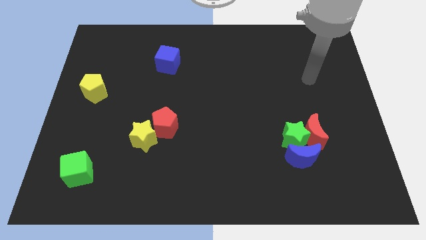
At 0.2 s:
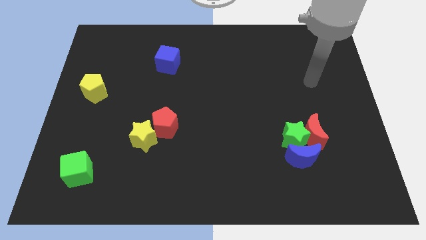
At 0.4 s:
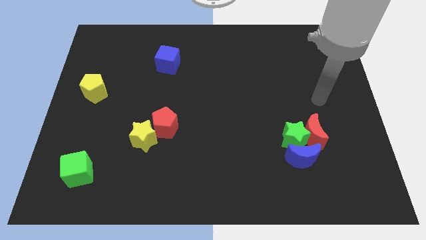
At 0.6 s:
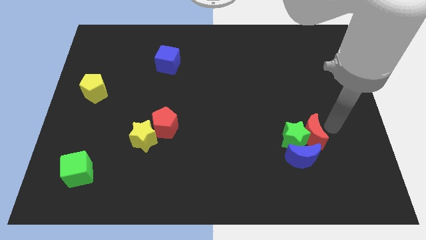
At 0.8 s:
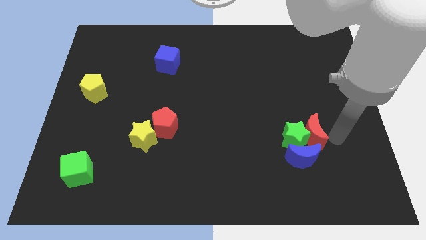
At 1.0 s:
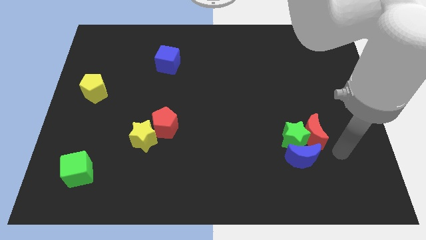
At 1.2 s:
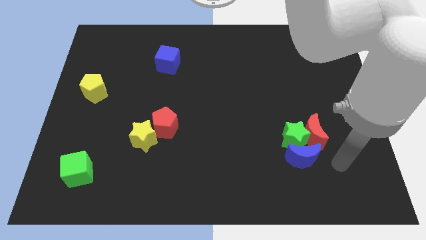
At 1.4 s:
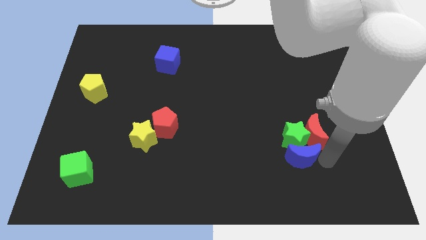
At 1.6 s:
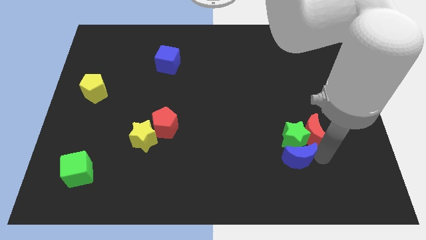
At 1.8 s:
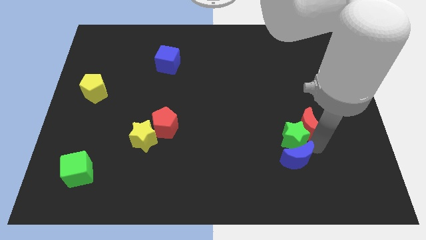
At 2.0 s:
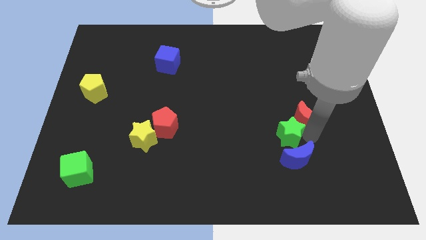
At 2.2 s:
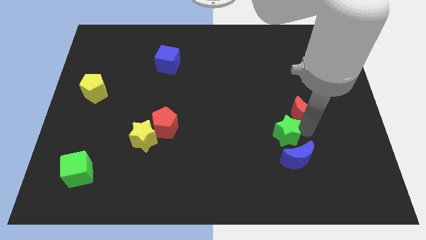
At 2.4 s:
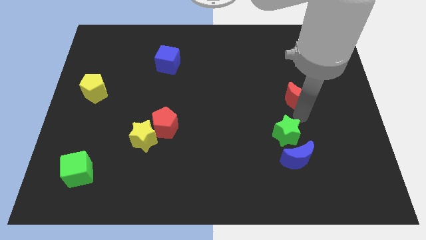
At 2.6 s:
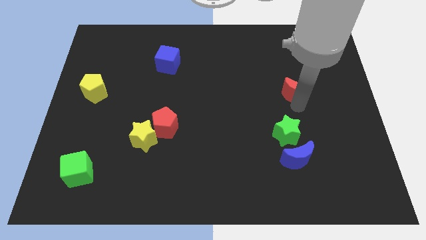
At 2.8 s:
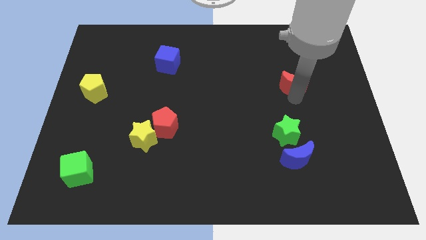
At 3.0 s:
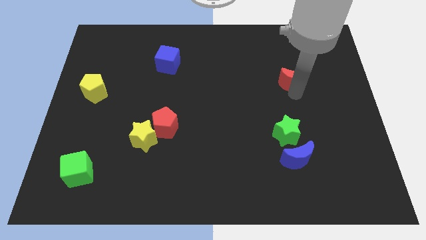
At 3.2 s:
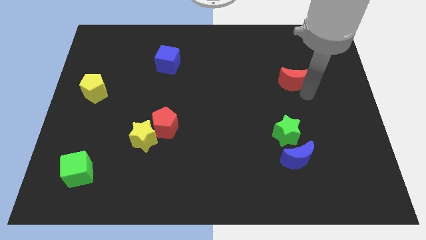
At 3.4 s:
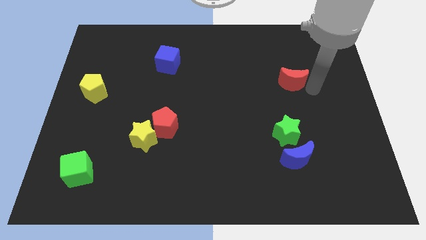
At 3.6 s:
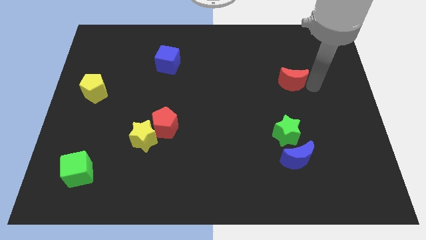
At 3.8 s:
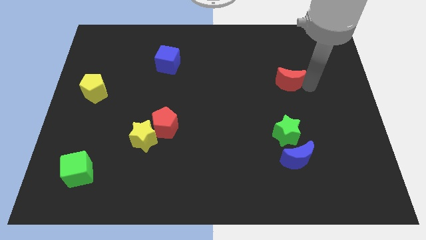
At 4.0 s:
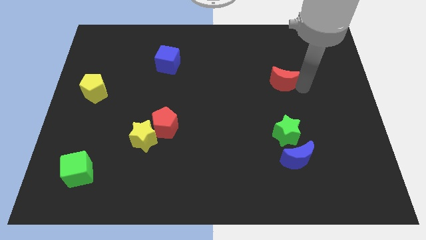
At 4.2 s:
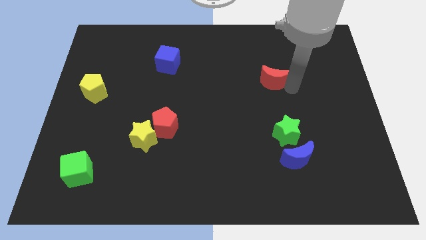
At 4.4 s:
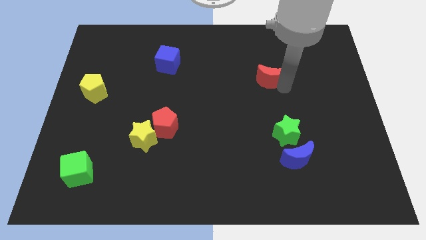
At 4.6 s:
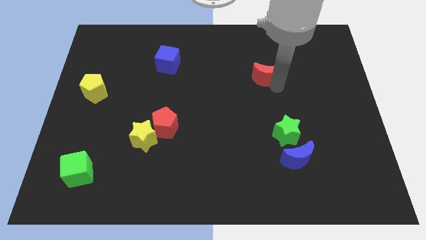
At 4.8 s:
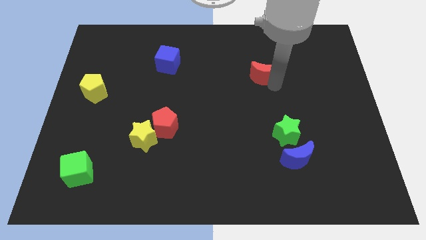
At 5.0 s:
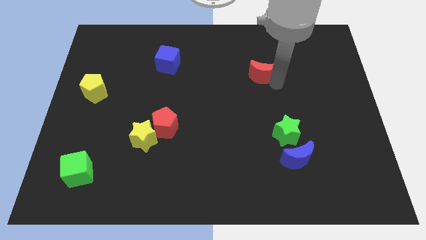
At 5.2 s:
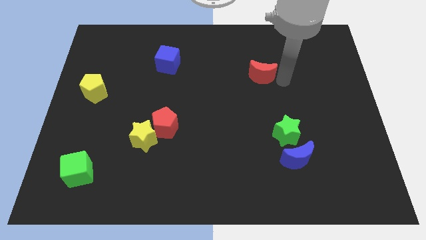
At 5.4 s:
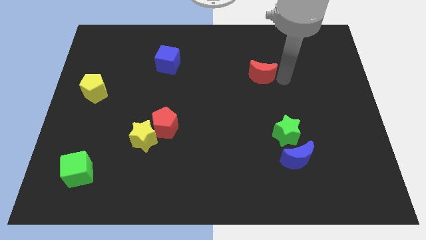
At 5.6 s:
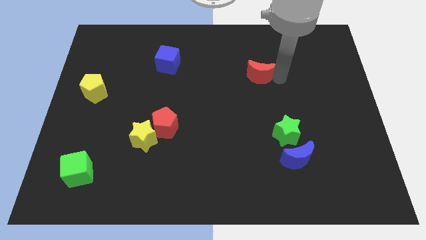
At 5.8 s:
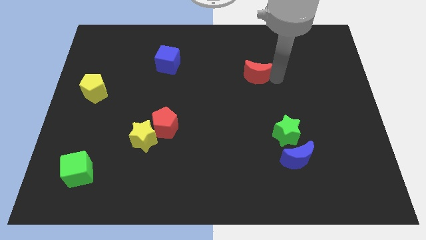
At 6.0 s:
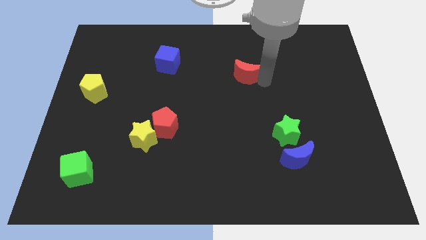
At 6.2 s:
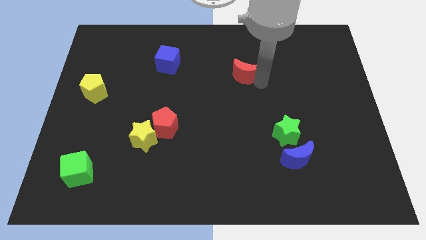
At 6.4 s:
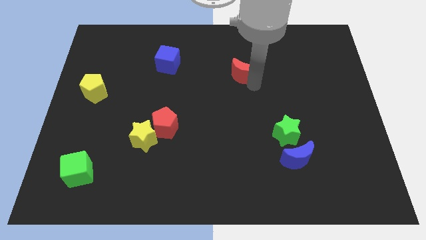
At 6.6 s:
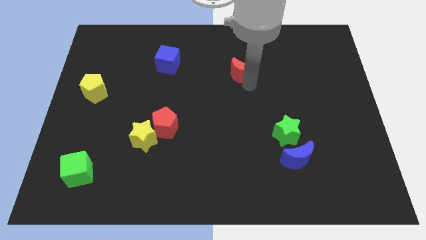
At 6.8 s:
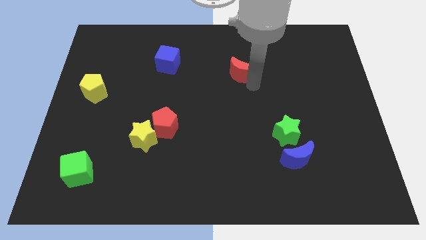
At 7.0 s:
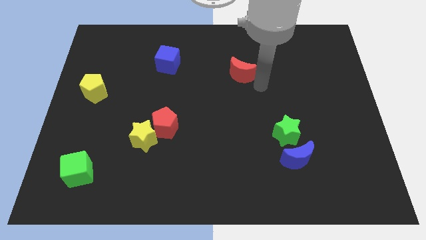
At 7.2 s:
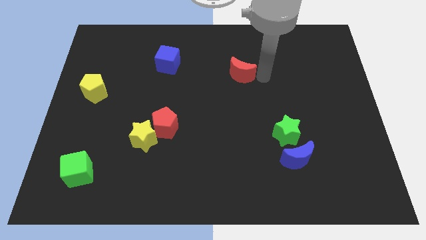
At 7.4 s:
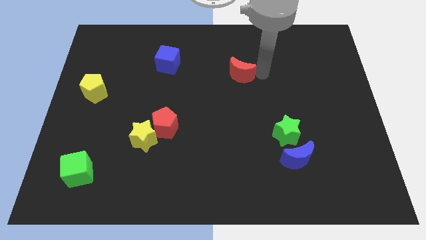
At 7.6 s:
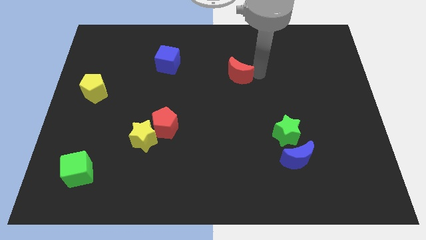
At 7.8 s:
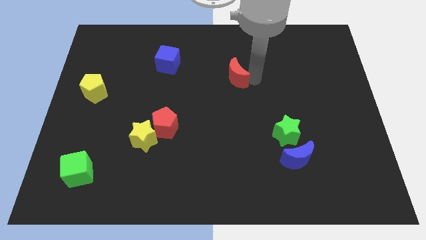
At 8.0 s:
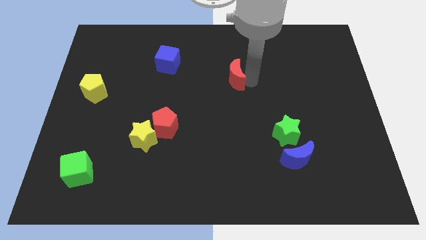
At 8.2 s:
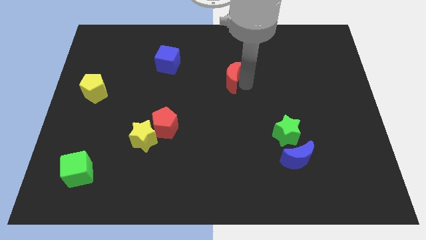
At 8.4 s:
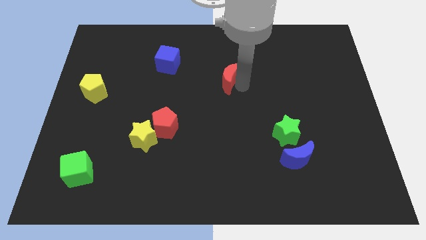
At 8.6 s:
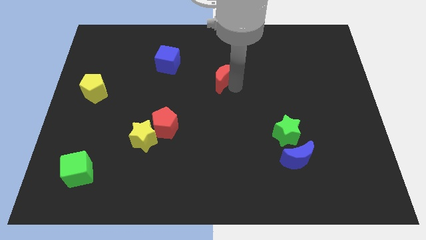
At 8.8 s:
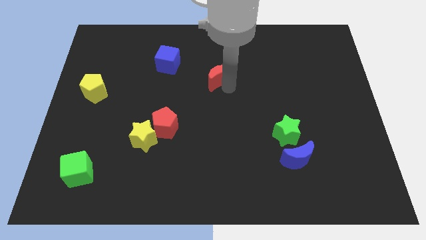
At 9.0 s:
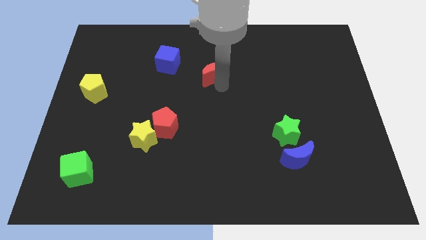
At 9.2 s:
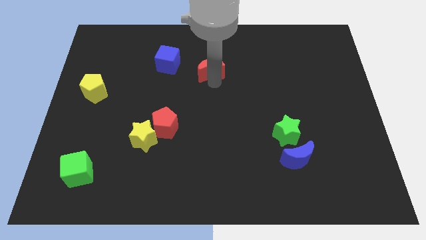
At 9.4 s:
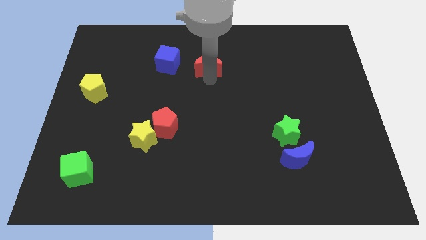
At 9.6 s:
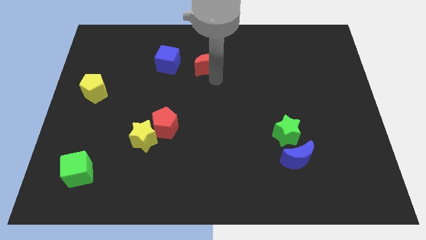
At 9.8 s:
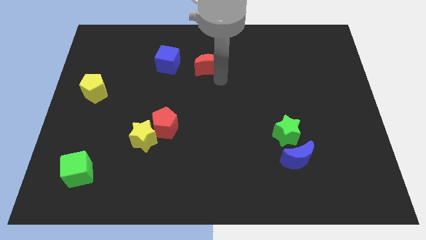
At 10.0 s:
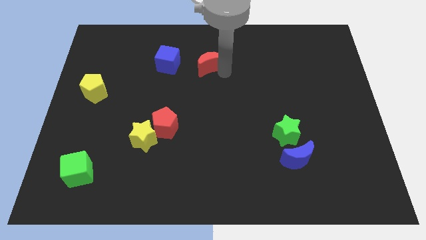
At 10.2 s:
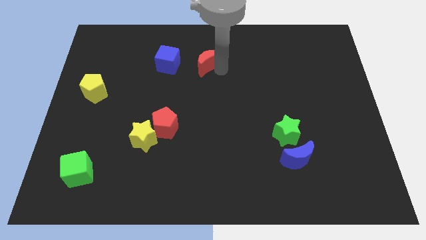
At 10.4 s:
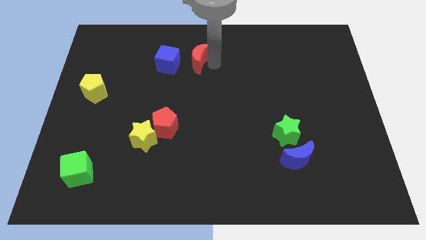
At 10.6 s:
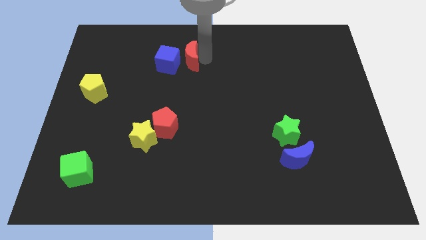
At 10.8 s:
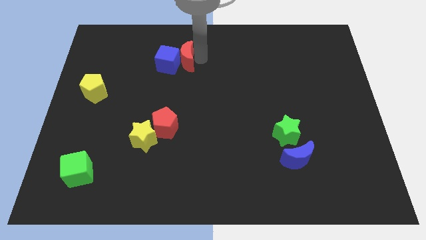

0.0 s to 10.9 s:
move the red moon to the blue cube

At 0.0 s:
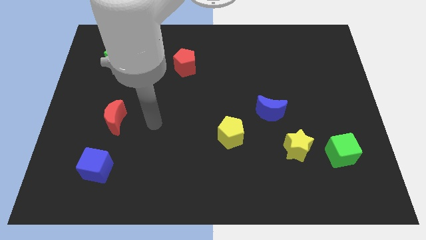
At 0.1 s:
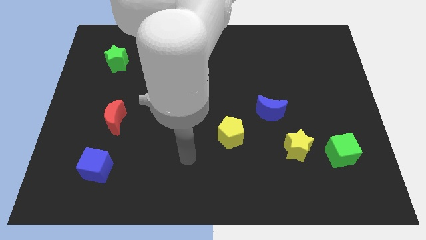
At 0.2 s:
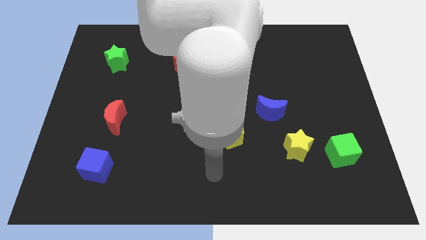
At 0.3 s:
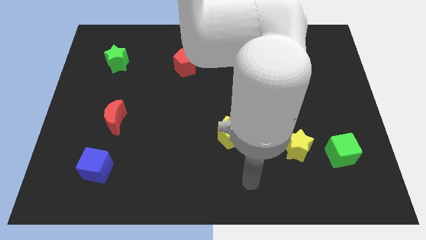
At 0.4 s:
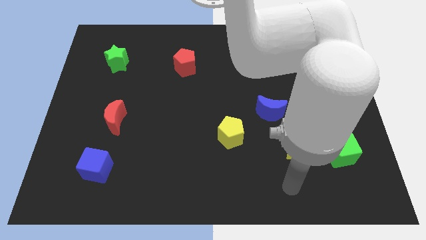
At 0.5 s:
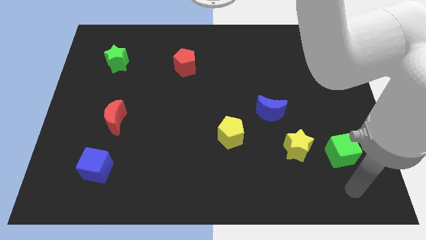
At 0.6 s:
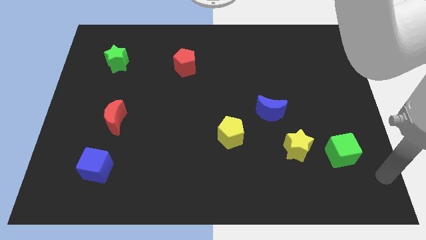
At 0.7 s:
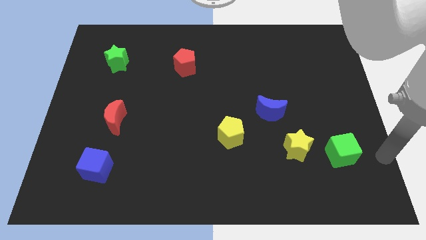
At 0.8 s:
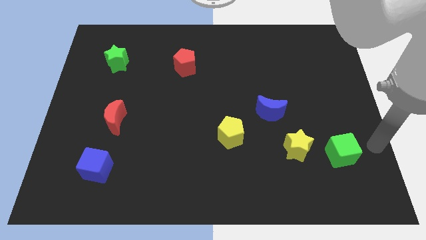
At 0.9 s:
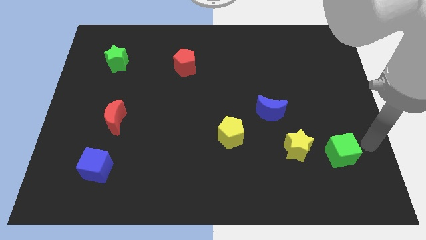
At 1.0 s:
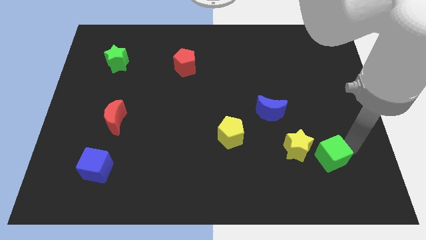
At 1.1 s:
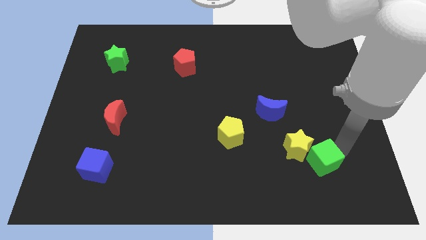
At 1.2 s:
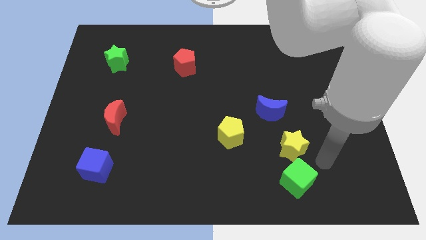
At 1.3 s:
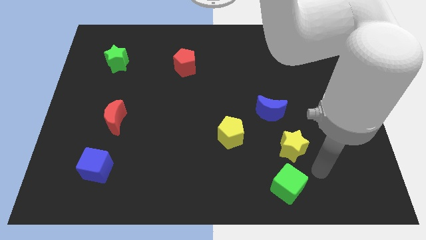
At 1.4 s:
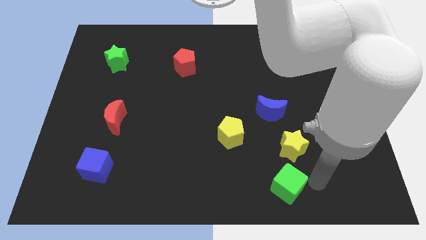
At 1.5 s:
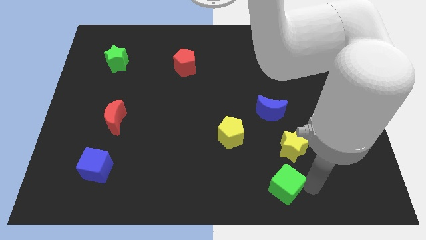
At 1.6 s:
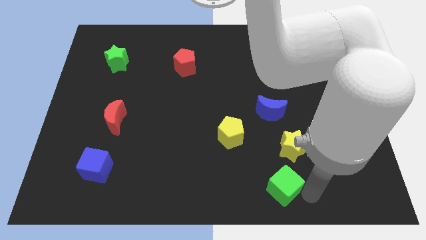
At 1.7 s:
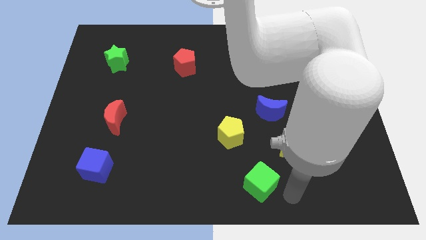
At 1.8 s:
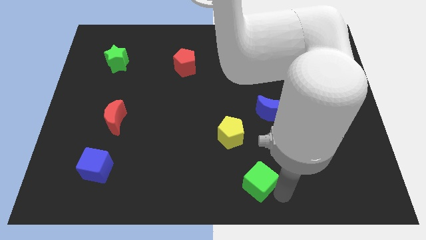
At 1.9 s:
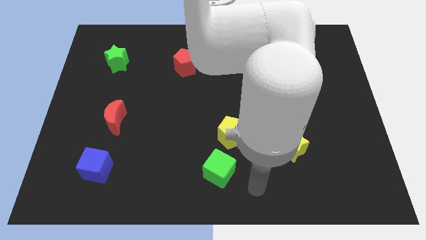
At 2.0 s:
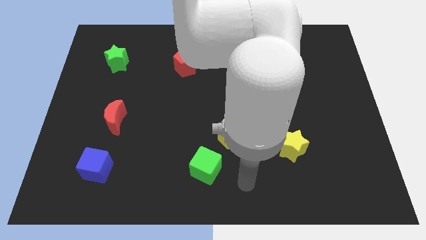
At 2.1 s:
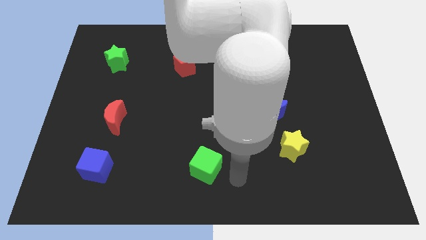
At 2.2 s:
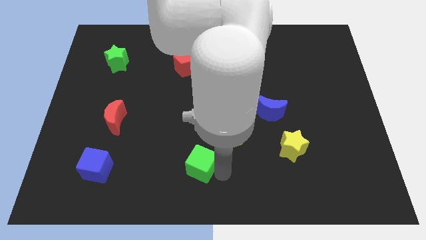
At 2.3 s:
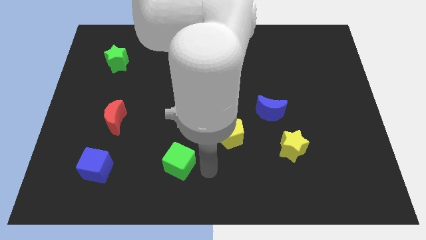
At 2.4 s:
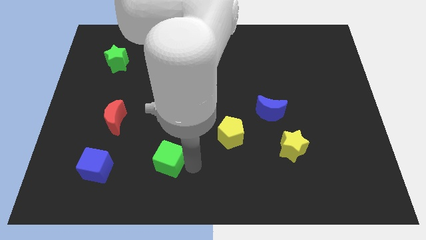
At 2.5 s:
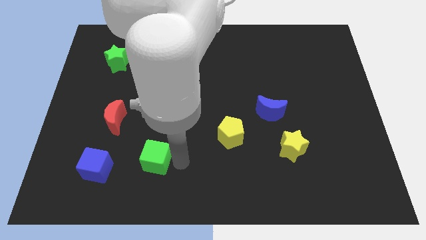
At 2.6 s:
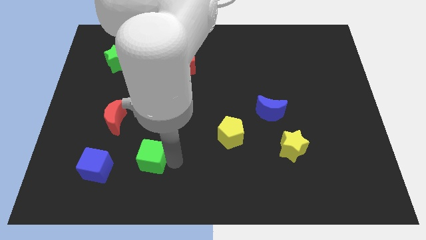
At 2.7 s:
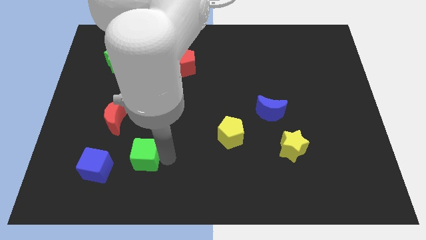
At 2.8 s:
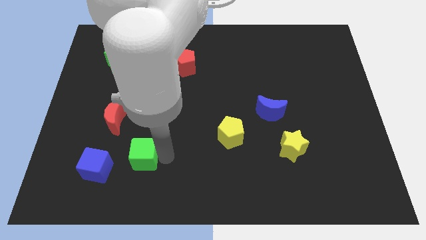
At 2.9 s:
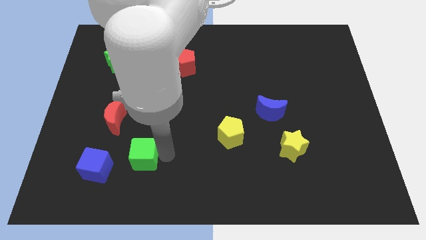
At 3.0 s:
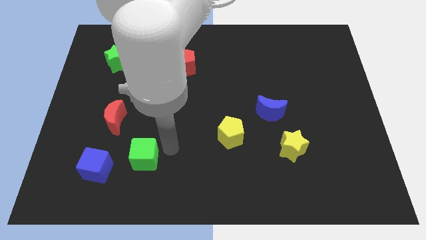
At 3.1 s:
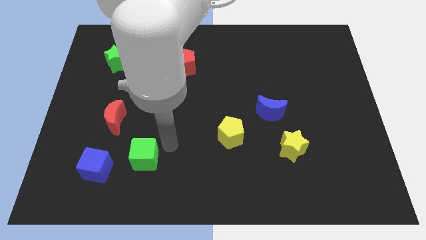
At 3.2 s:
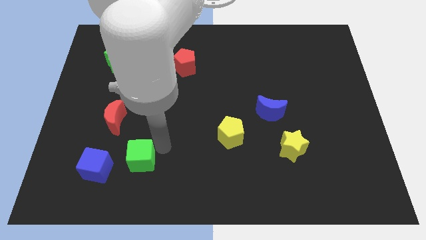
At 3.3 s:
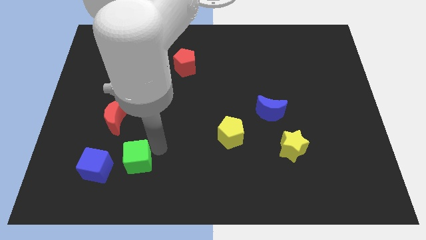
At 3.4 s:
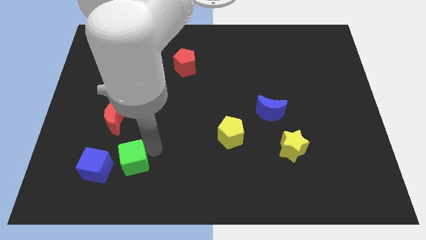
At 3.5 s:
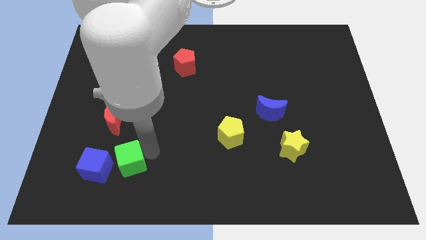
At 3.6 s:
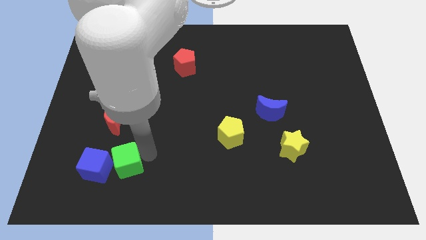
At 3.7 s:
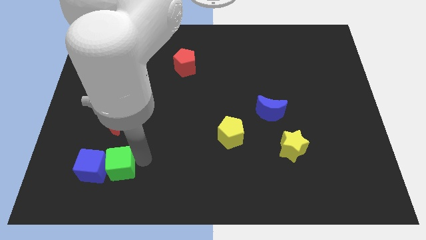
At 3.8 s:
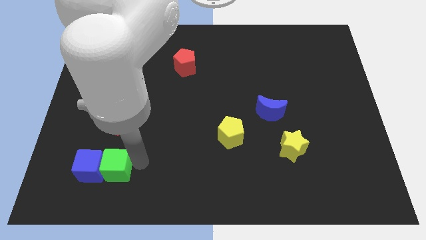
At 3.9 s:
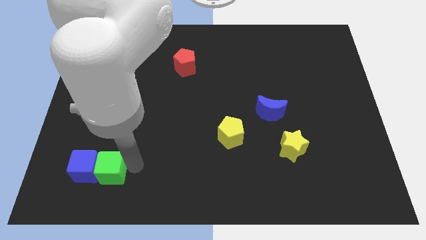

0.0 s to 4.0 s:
slide the green cube close to the blue cube
